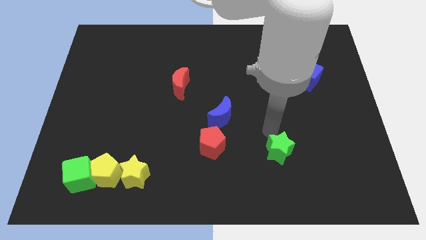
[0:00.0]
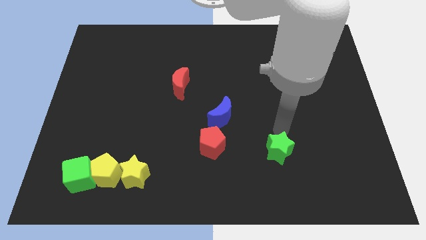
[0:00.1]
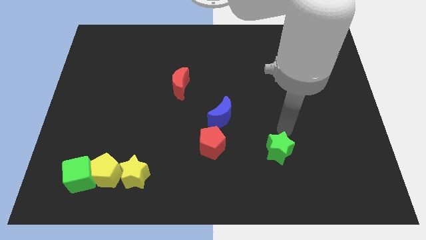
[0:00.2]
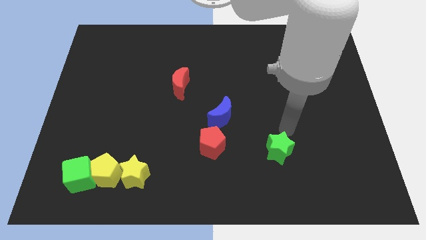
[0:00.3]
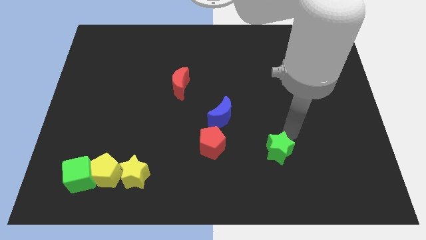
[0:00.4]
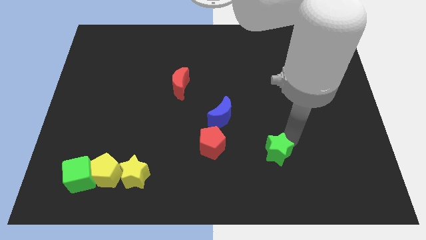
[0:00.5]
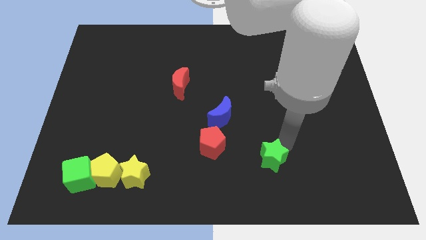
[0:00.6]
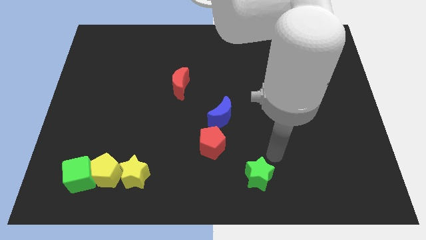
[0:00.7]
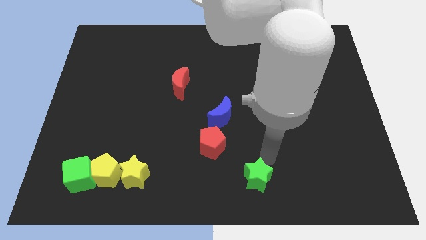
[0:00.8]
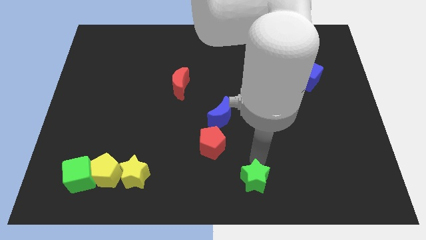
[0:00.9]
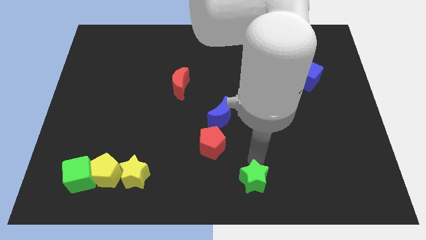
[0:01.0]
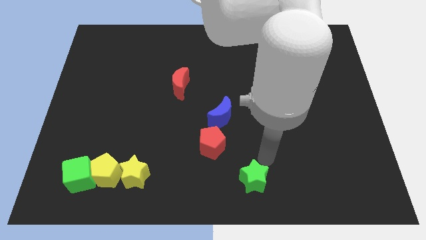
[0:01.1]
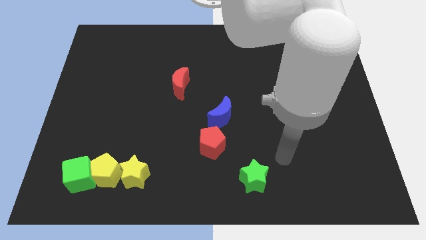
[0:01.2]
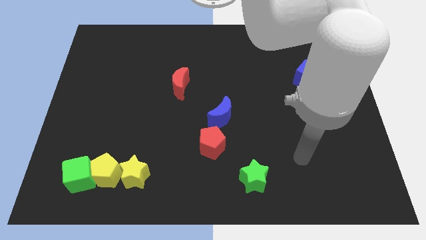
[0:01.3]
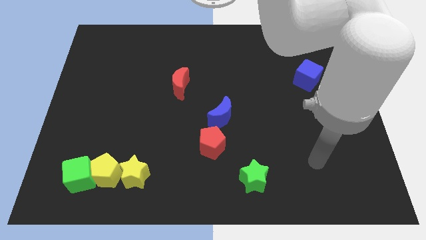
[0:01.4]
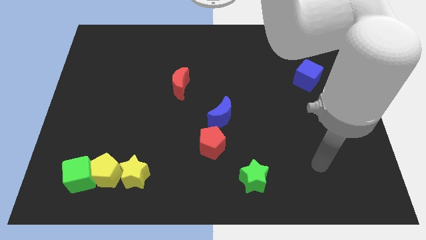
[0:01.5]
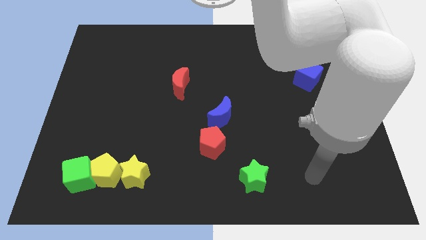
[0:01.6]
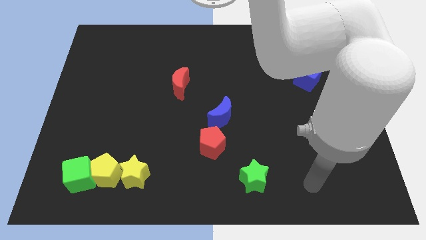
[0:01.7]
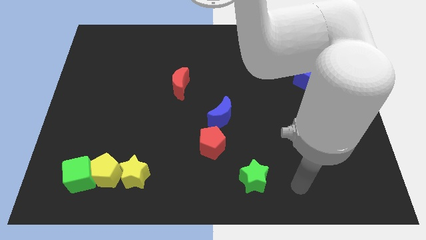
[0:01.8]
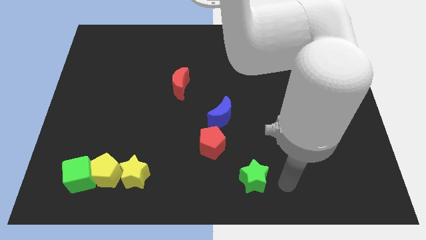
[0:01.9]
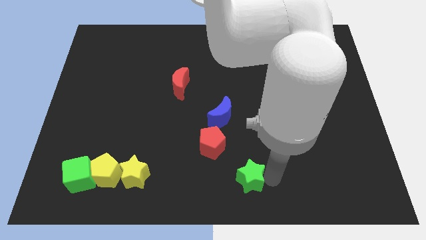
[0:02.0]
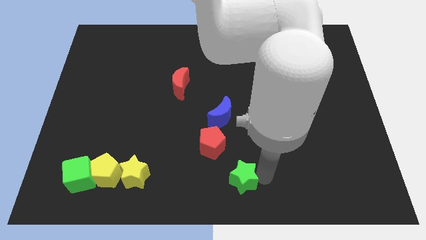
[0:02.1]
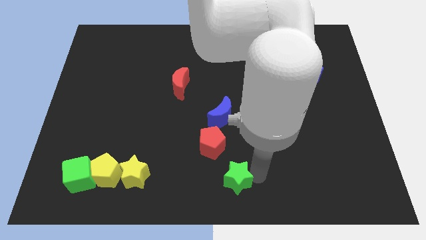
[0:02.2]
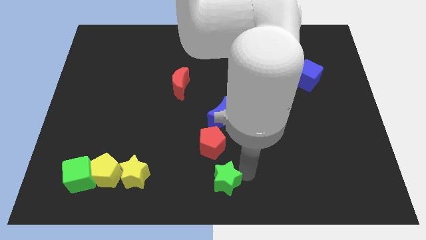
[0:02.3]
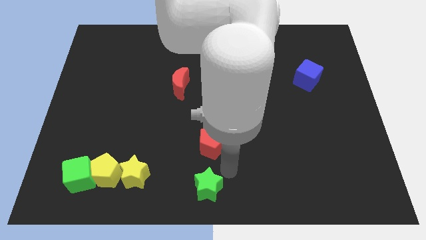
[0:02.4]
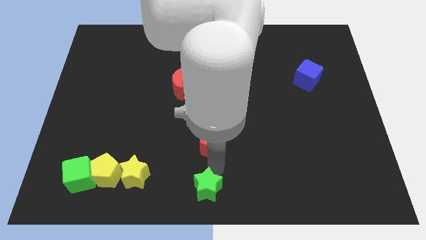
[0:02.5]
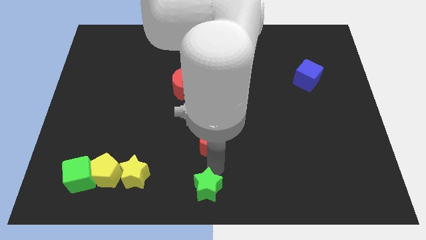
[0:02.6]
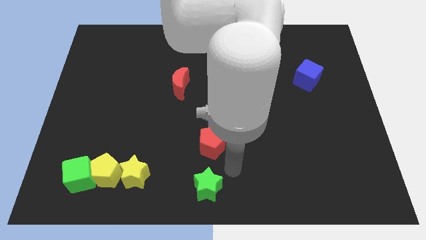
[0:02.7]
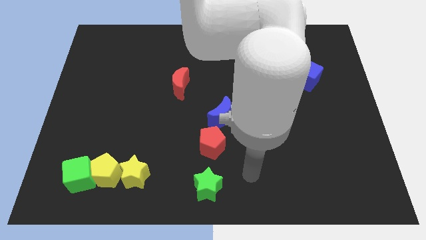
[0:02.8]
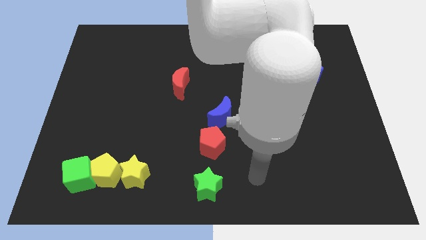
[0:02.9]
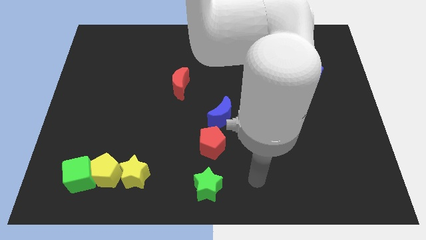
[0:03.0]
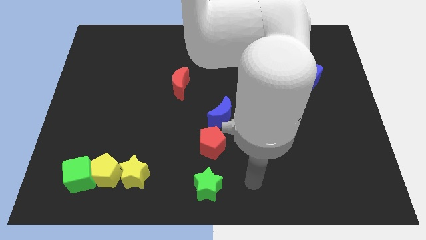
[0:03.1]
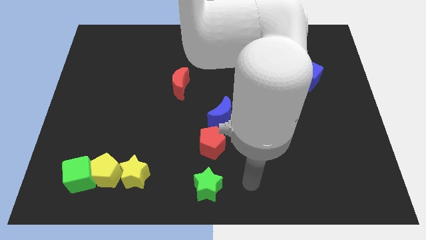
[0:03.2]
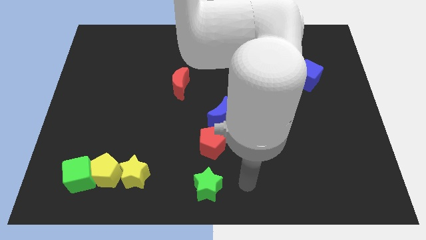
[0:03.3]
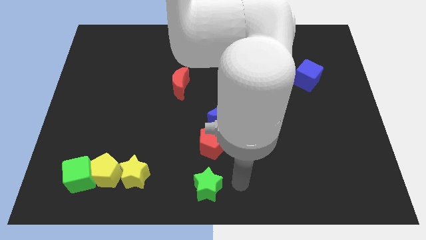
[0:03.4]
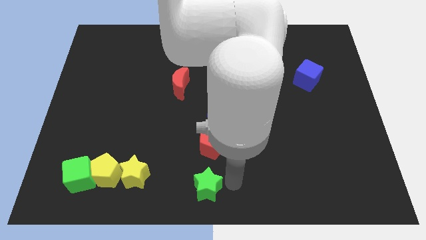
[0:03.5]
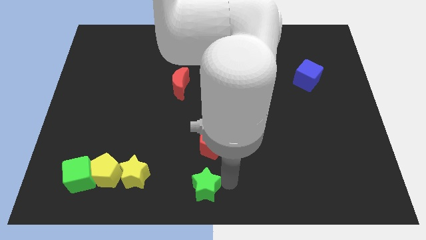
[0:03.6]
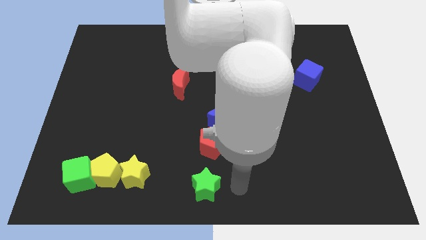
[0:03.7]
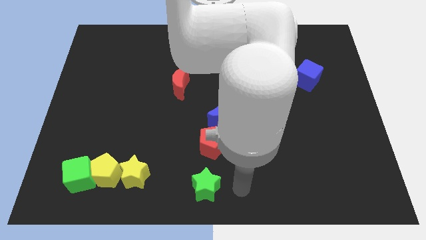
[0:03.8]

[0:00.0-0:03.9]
move the green star to the bottom center

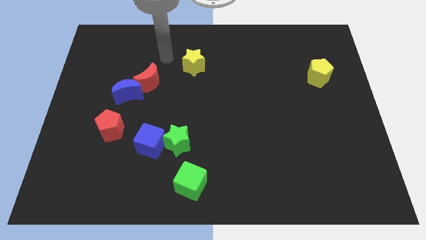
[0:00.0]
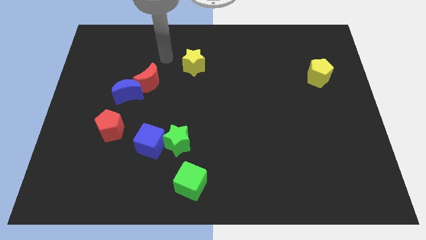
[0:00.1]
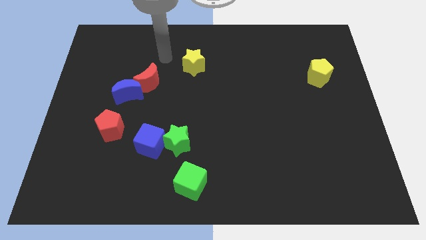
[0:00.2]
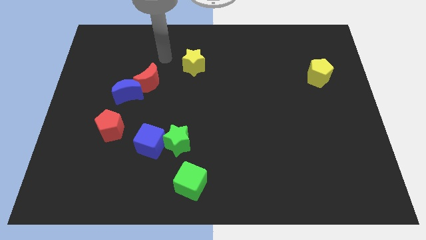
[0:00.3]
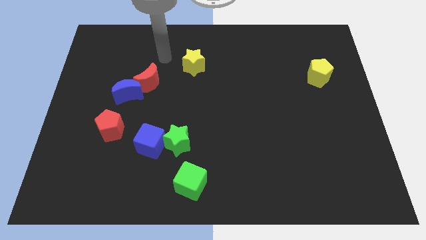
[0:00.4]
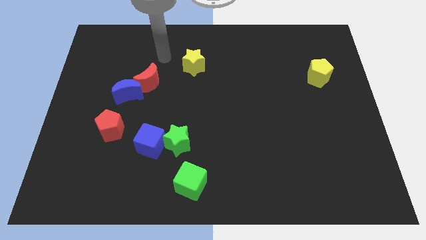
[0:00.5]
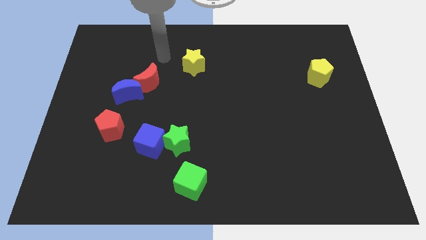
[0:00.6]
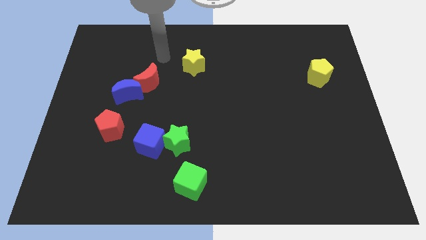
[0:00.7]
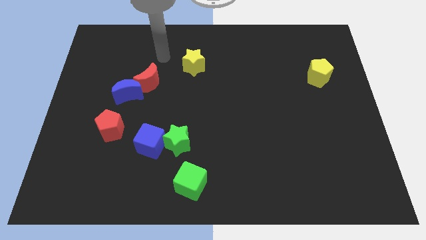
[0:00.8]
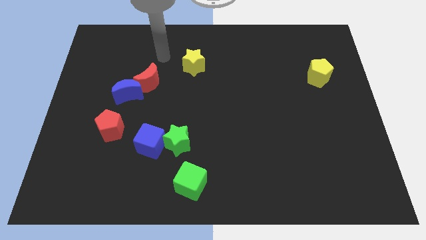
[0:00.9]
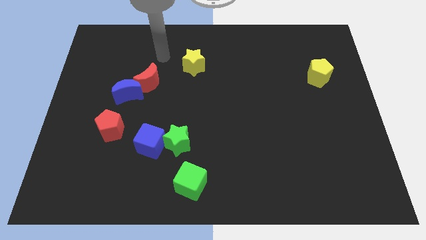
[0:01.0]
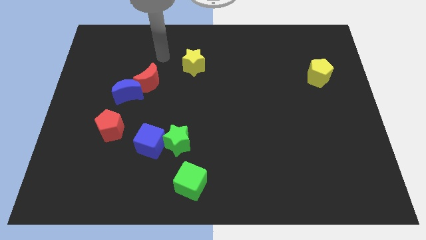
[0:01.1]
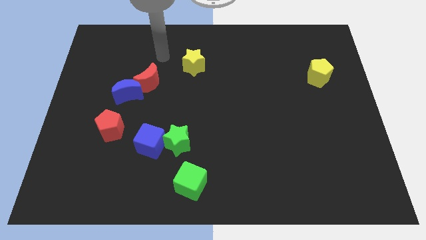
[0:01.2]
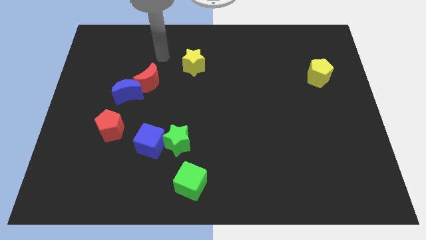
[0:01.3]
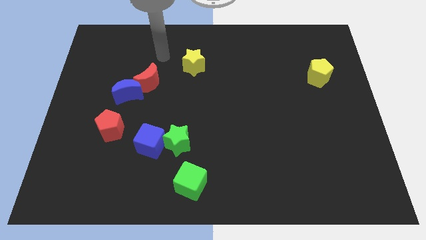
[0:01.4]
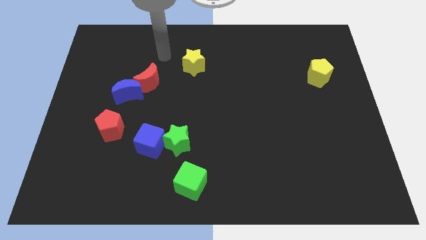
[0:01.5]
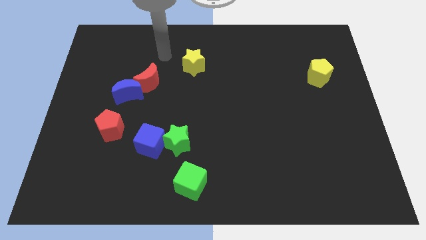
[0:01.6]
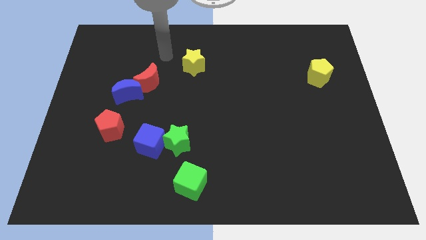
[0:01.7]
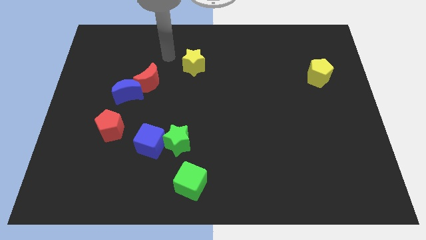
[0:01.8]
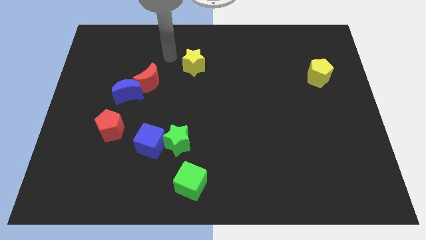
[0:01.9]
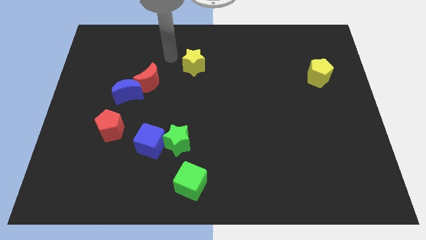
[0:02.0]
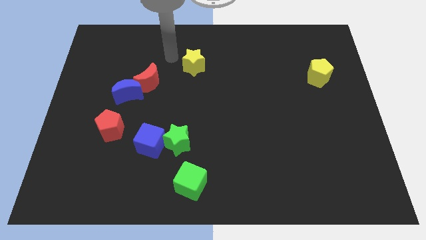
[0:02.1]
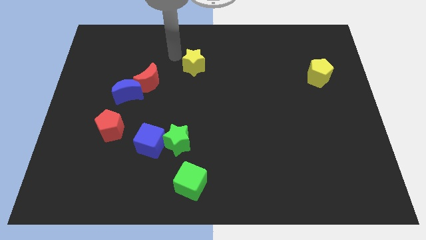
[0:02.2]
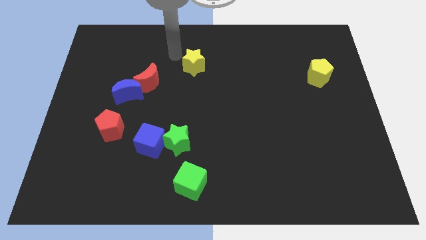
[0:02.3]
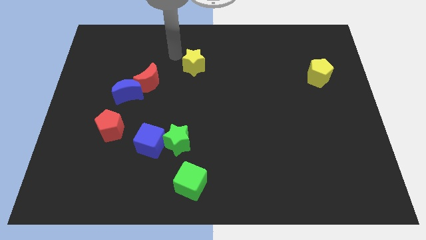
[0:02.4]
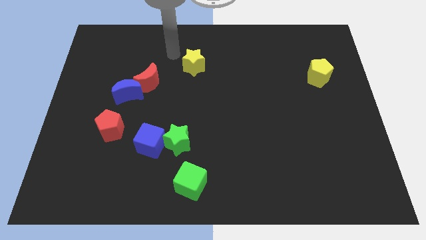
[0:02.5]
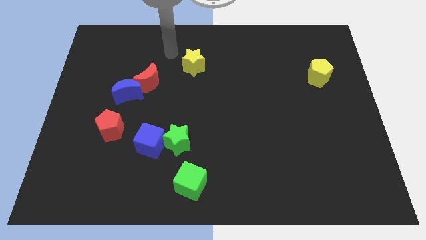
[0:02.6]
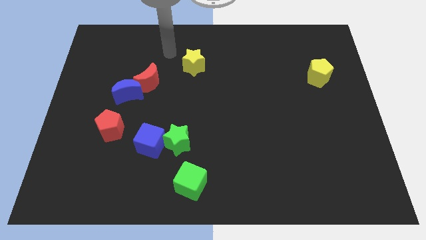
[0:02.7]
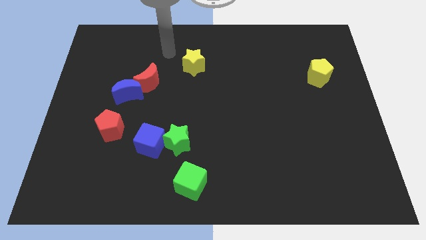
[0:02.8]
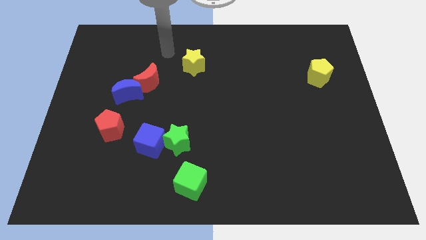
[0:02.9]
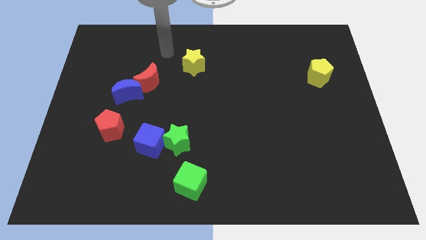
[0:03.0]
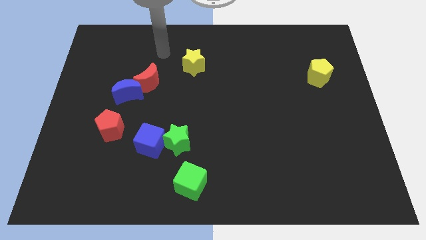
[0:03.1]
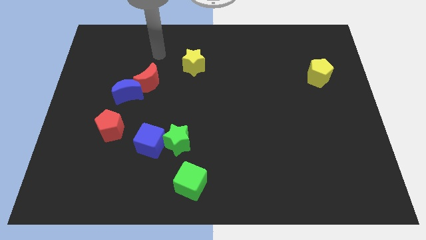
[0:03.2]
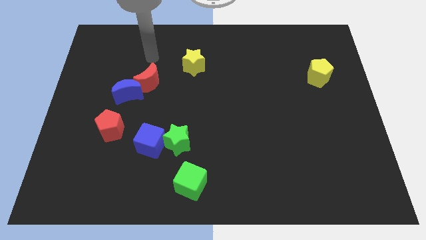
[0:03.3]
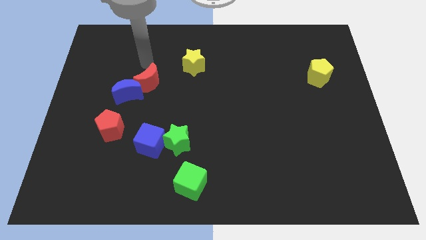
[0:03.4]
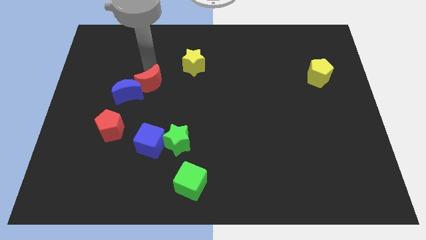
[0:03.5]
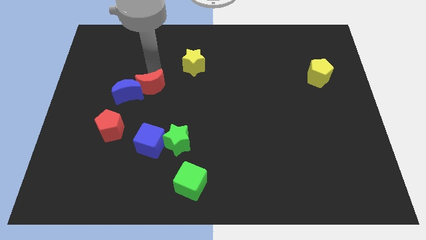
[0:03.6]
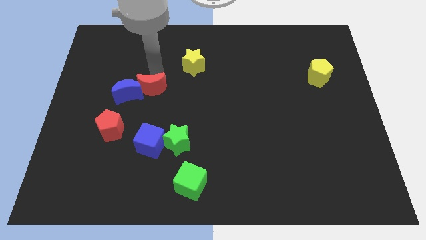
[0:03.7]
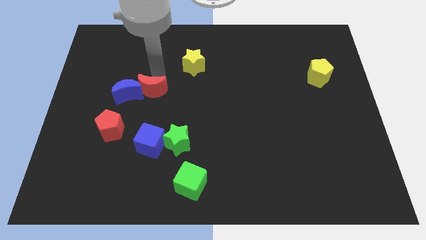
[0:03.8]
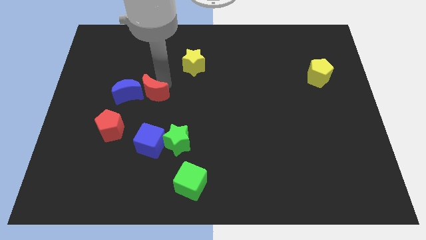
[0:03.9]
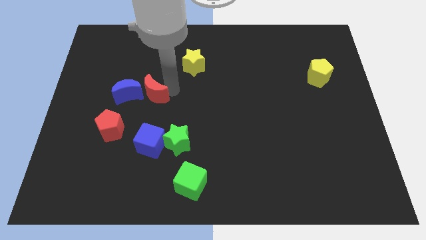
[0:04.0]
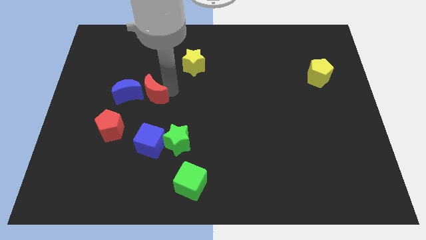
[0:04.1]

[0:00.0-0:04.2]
push the red crescent towards the bottom right side of blue crescent

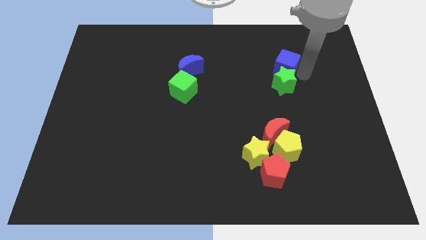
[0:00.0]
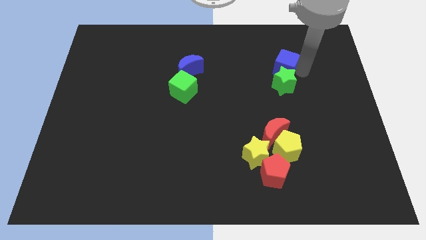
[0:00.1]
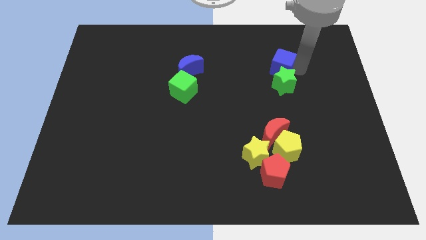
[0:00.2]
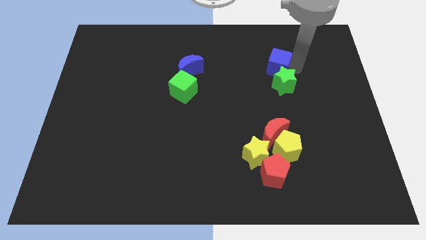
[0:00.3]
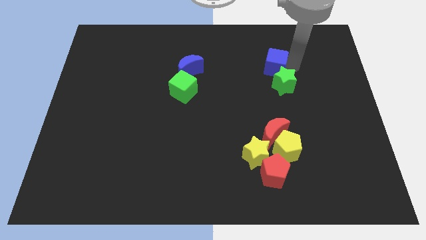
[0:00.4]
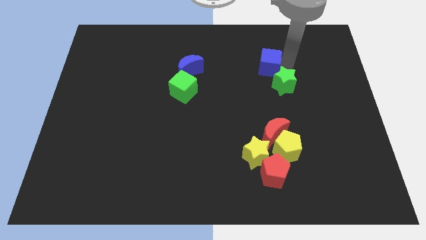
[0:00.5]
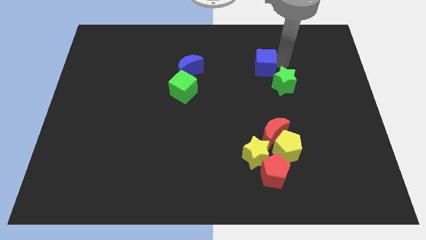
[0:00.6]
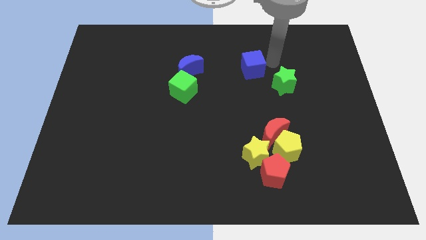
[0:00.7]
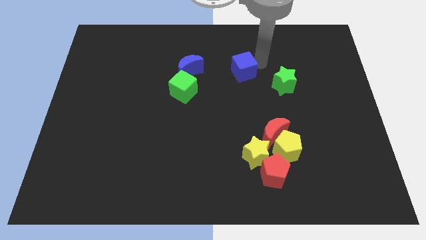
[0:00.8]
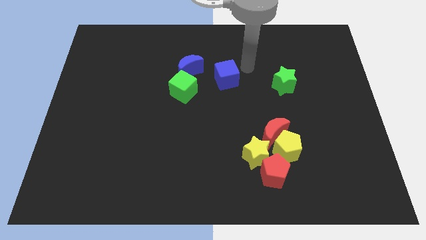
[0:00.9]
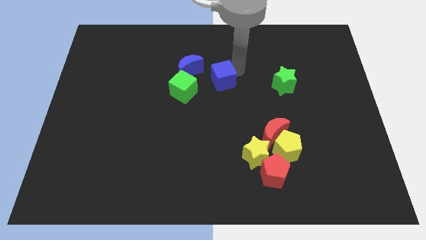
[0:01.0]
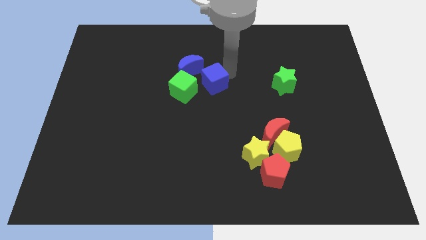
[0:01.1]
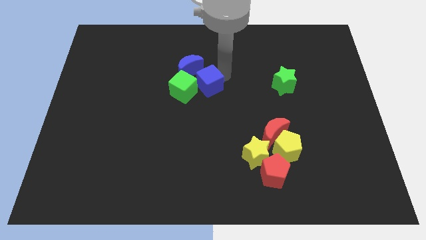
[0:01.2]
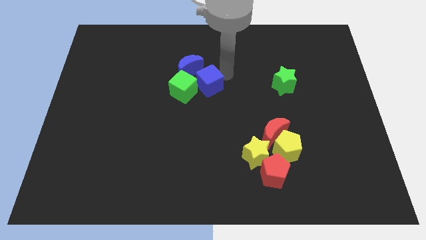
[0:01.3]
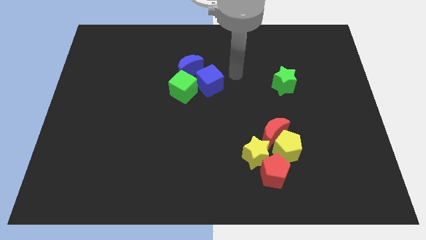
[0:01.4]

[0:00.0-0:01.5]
place blue cube to the right side of the green cube
